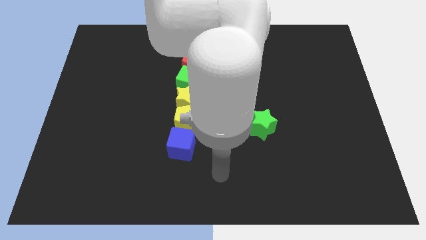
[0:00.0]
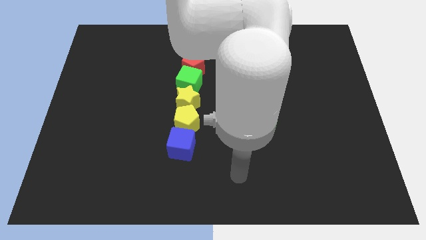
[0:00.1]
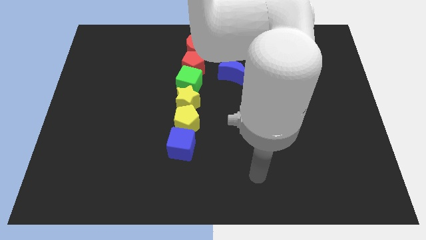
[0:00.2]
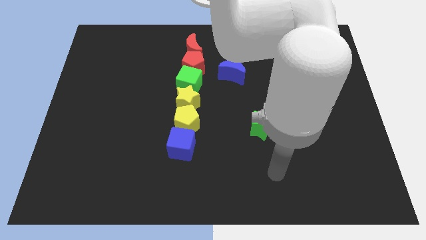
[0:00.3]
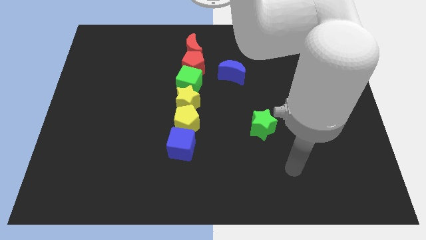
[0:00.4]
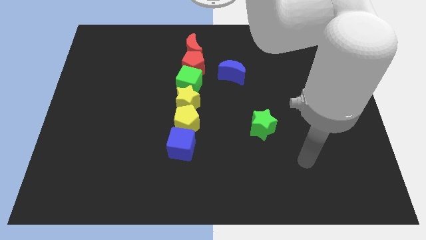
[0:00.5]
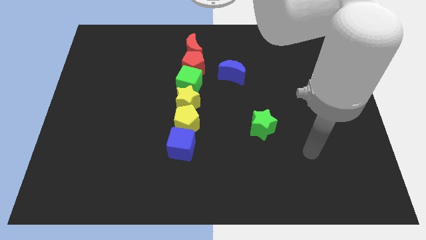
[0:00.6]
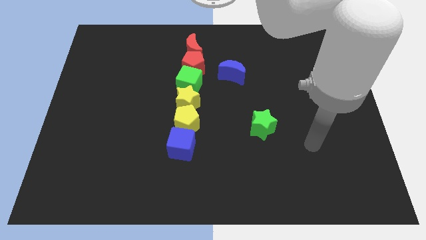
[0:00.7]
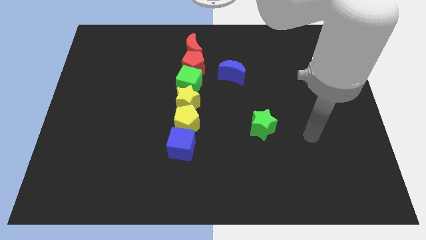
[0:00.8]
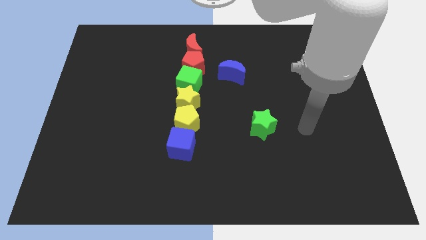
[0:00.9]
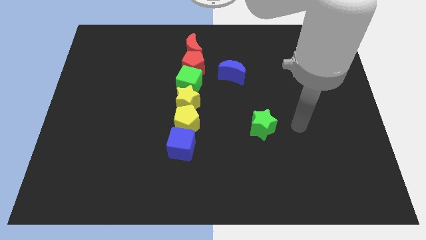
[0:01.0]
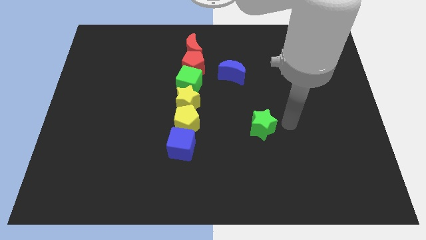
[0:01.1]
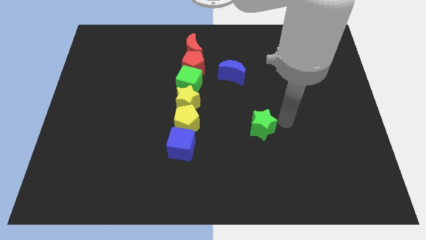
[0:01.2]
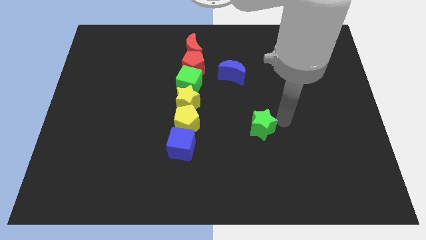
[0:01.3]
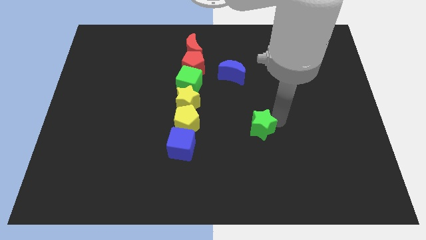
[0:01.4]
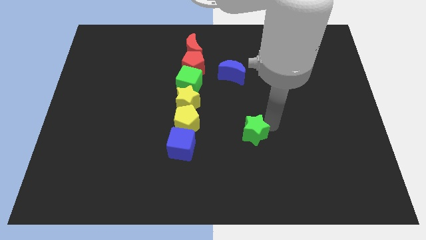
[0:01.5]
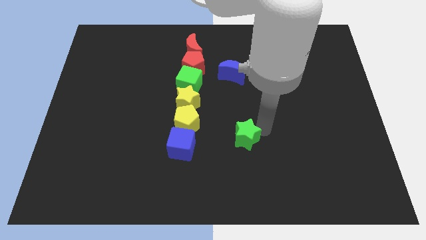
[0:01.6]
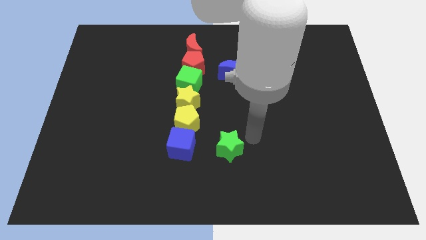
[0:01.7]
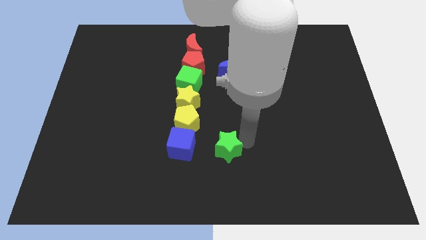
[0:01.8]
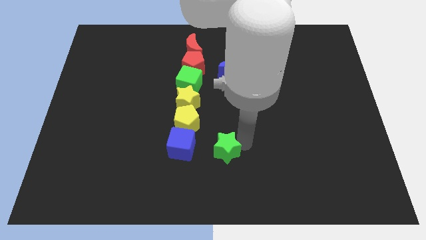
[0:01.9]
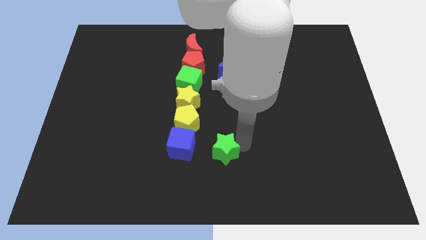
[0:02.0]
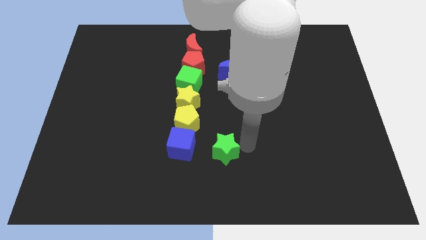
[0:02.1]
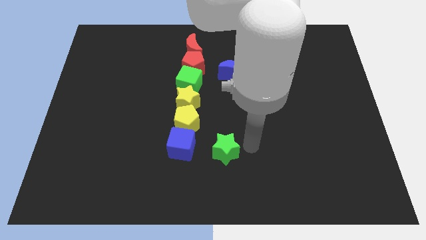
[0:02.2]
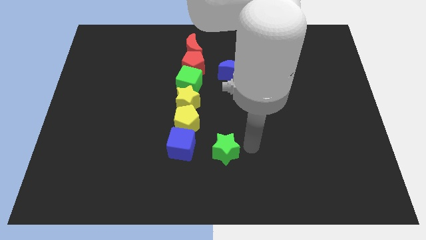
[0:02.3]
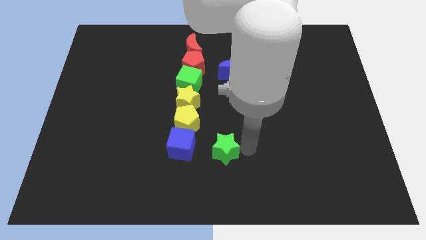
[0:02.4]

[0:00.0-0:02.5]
place the green star to the right of blue cube

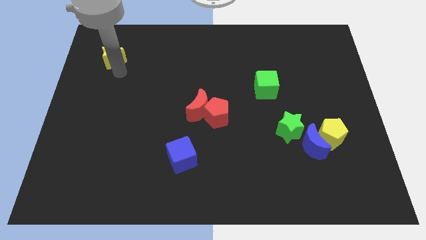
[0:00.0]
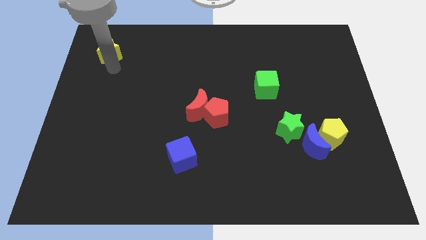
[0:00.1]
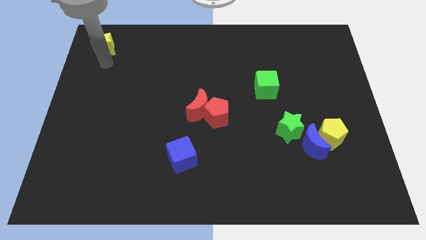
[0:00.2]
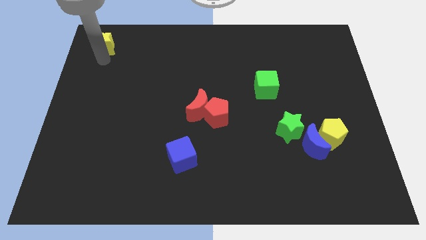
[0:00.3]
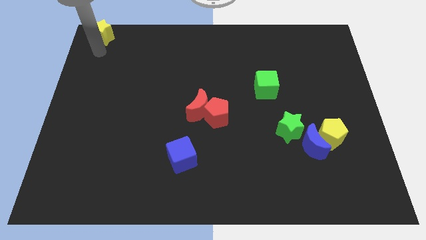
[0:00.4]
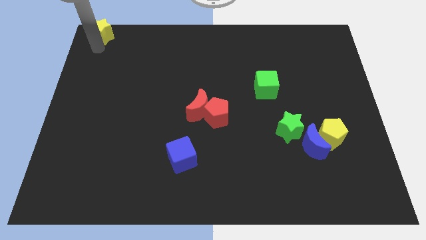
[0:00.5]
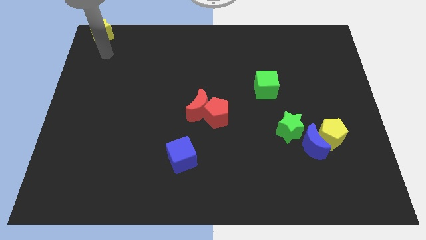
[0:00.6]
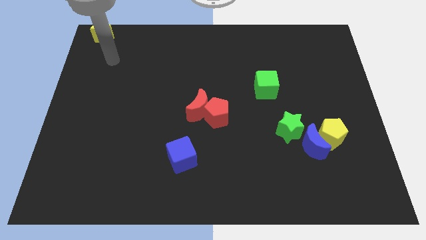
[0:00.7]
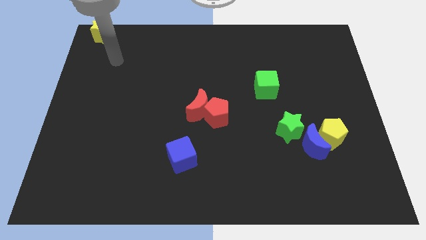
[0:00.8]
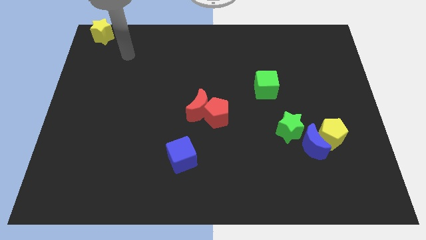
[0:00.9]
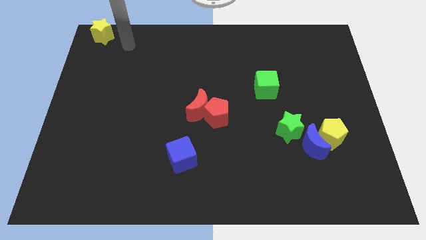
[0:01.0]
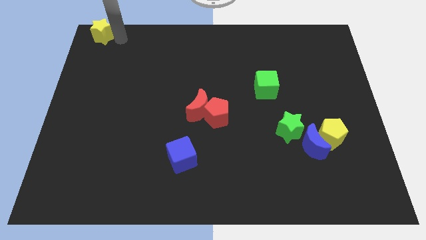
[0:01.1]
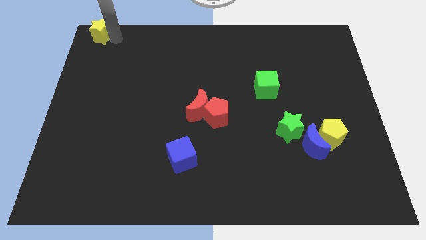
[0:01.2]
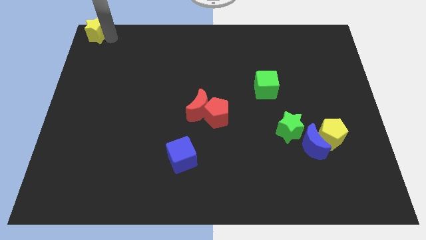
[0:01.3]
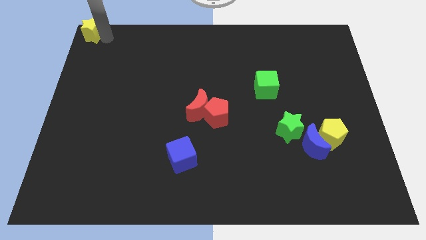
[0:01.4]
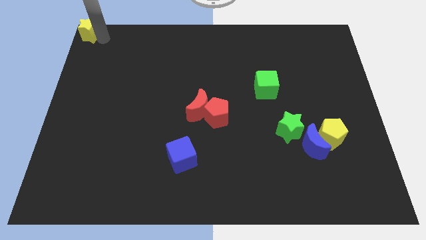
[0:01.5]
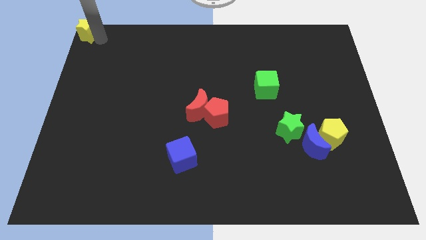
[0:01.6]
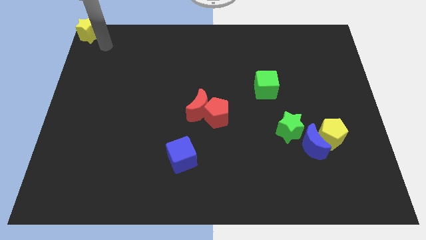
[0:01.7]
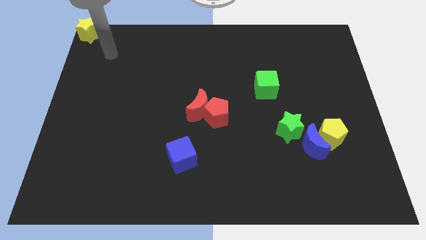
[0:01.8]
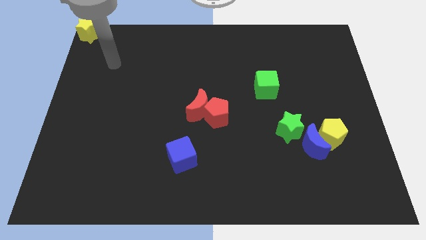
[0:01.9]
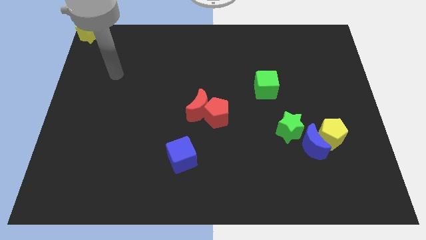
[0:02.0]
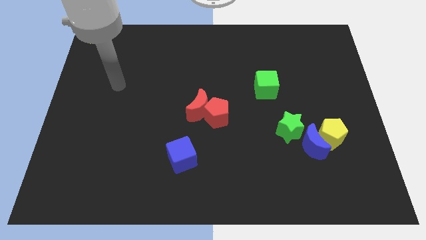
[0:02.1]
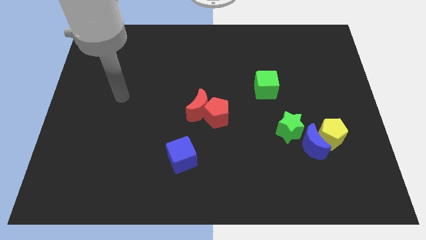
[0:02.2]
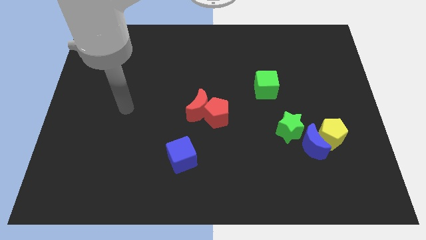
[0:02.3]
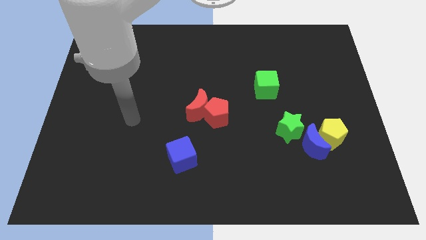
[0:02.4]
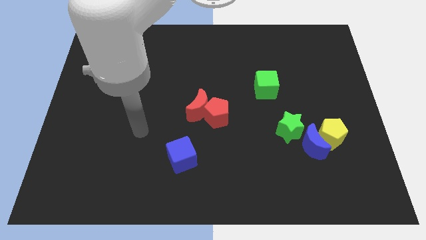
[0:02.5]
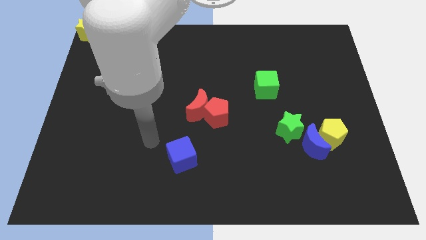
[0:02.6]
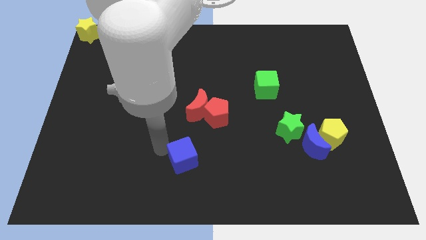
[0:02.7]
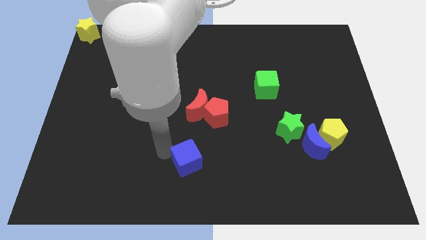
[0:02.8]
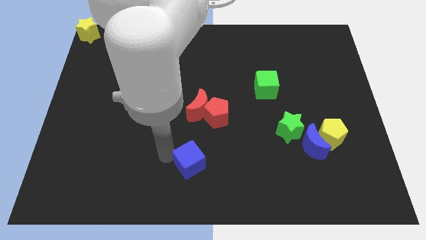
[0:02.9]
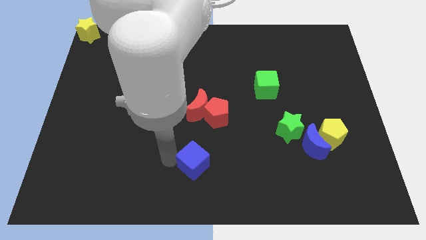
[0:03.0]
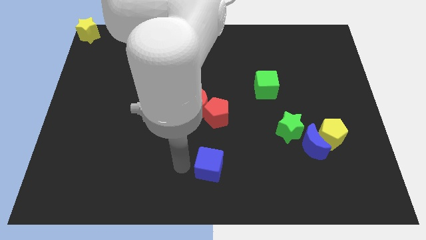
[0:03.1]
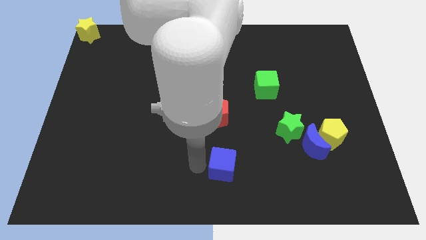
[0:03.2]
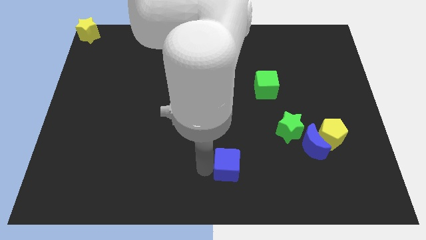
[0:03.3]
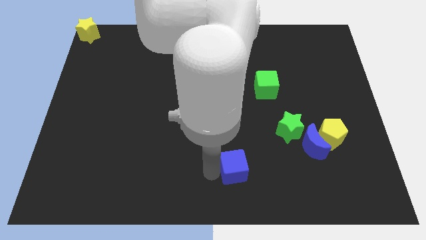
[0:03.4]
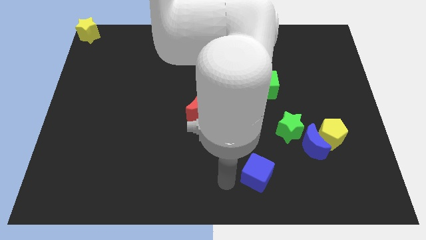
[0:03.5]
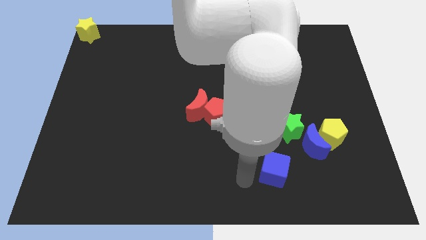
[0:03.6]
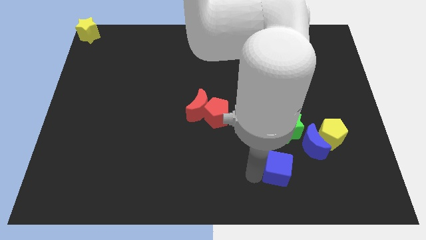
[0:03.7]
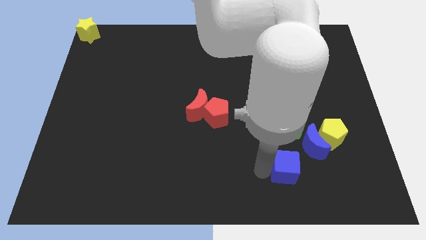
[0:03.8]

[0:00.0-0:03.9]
move the blue cube towards the bottom right of the board

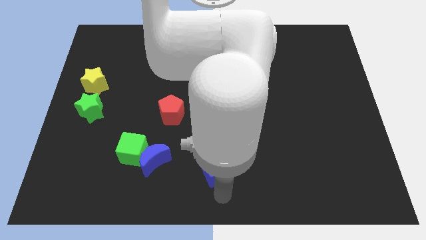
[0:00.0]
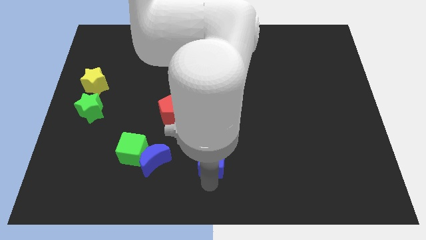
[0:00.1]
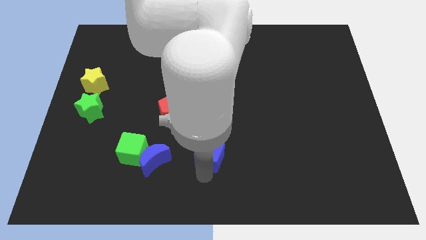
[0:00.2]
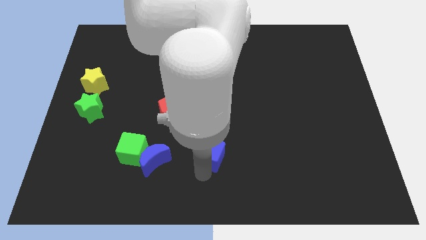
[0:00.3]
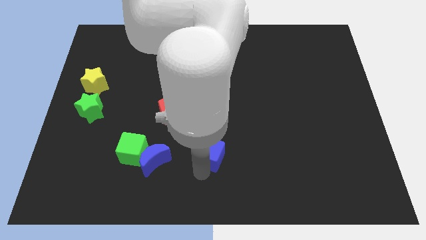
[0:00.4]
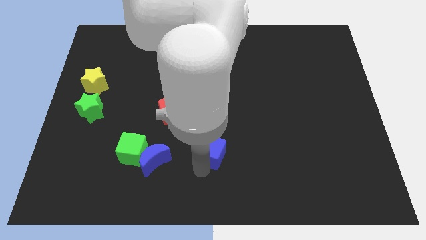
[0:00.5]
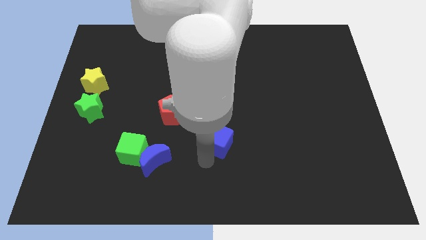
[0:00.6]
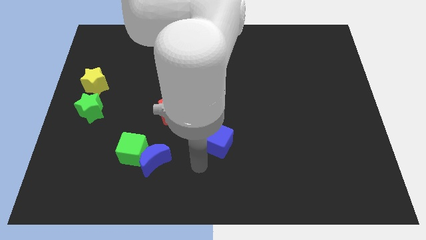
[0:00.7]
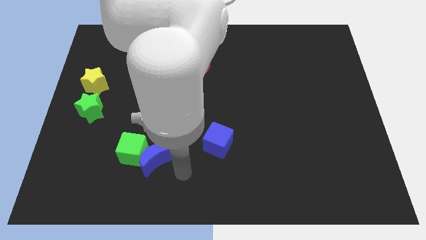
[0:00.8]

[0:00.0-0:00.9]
push the blue cube slightly towards the center

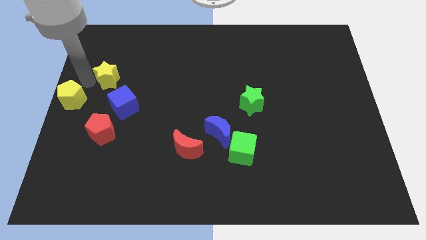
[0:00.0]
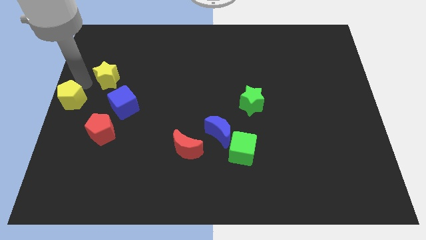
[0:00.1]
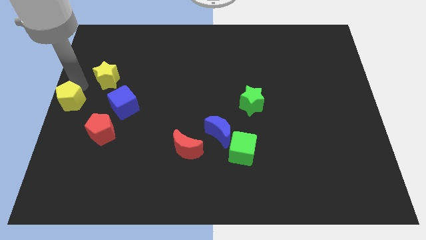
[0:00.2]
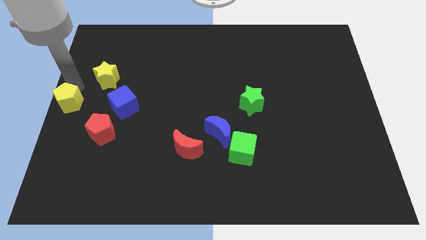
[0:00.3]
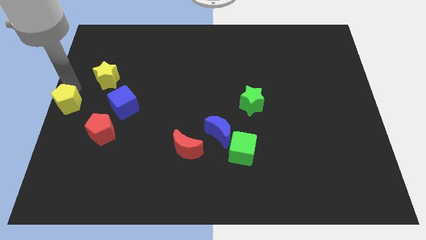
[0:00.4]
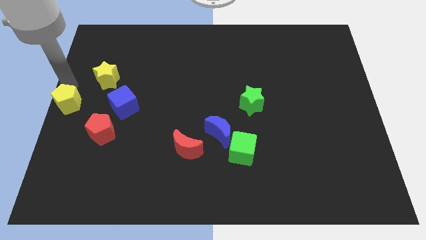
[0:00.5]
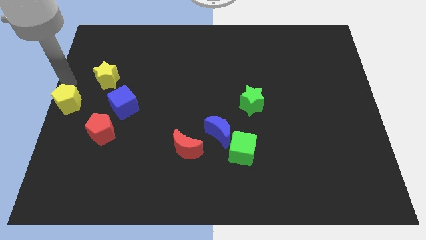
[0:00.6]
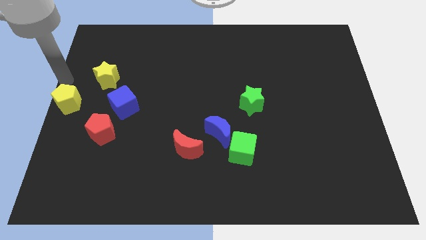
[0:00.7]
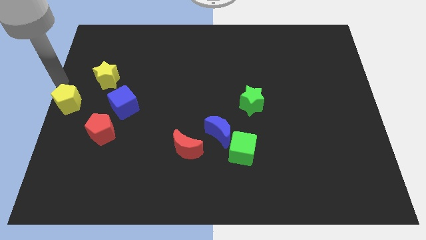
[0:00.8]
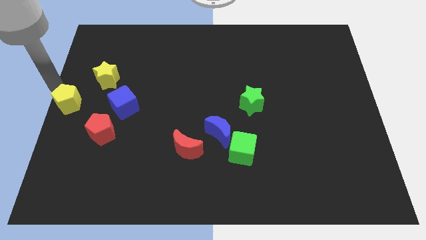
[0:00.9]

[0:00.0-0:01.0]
place the yellow pentagon to the center left side of the board

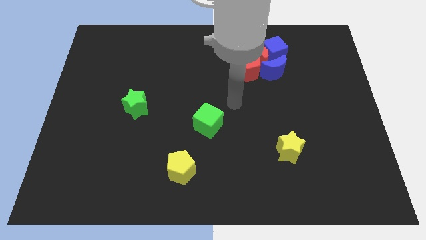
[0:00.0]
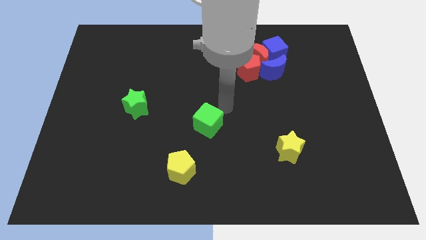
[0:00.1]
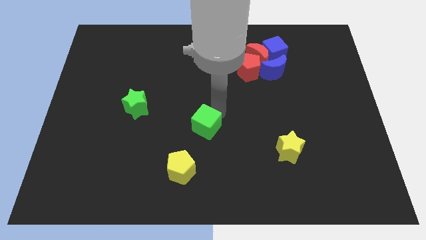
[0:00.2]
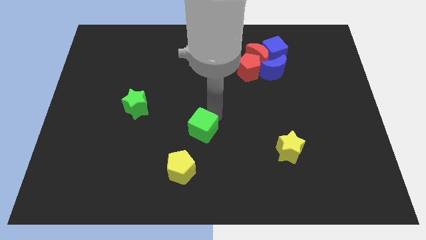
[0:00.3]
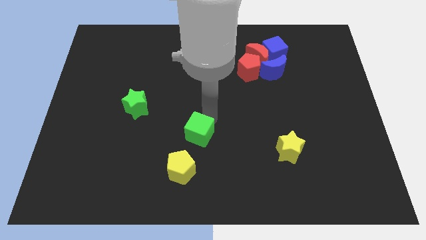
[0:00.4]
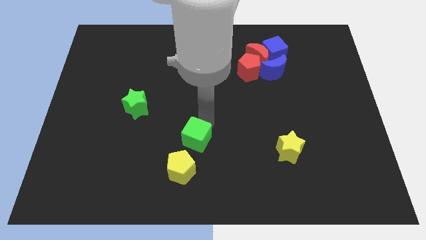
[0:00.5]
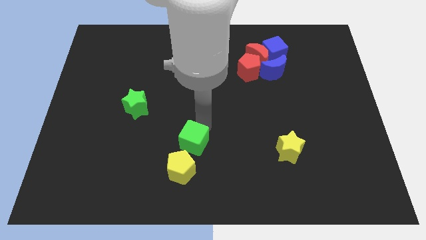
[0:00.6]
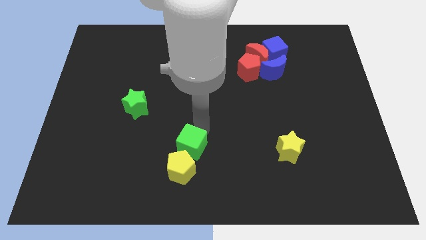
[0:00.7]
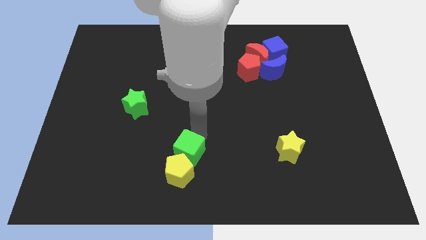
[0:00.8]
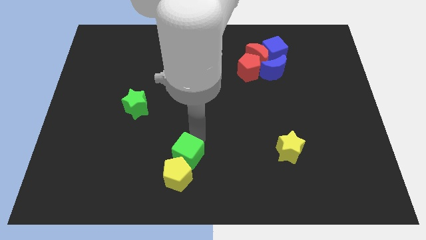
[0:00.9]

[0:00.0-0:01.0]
place the green cube above the yellow pentagon
